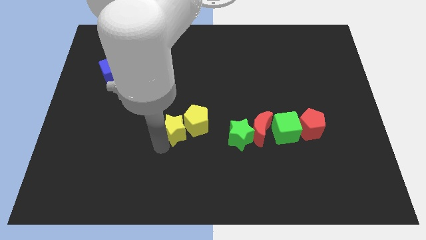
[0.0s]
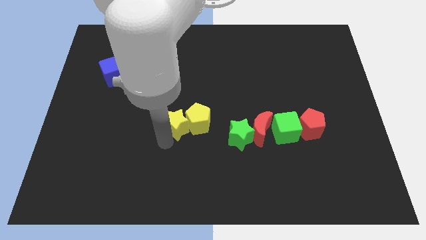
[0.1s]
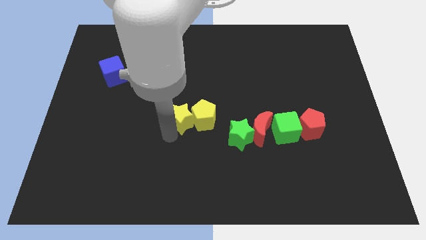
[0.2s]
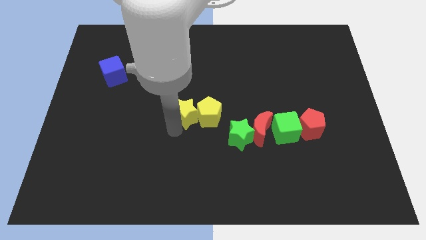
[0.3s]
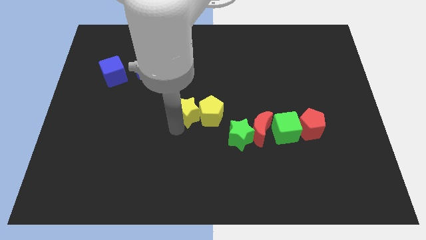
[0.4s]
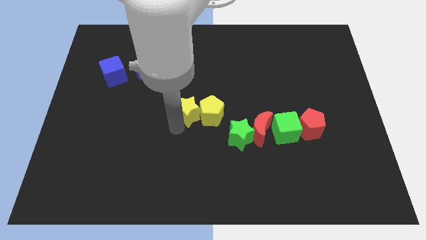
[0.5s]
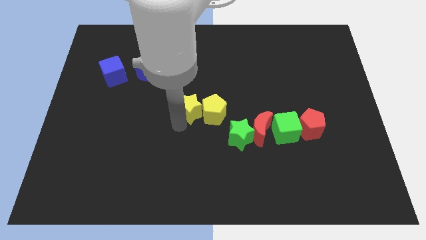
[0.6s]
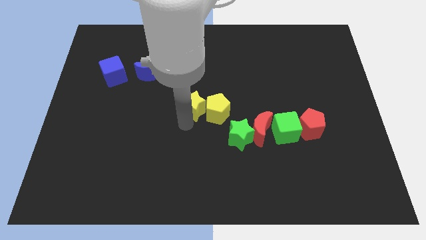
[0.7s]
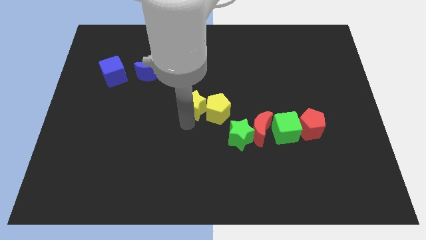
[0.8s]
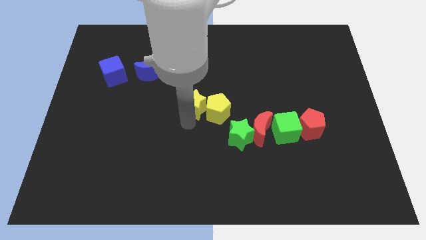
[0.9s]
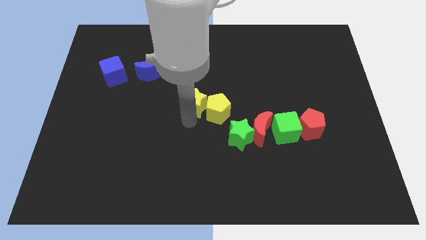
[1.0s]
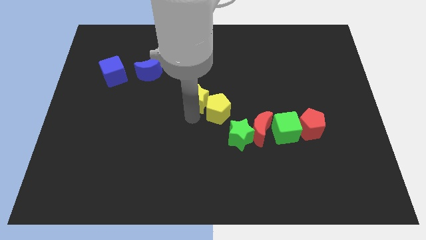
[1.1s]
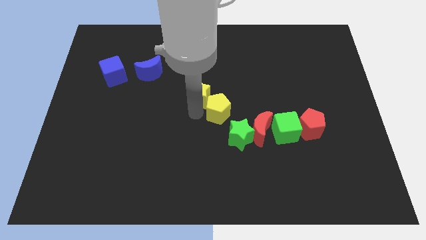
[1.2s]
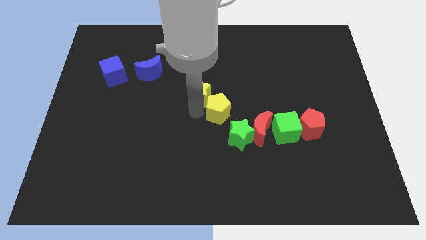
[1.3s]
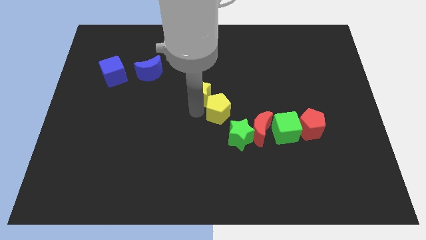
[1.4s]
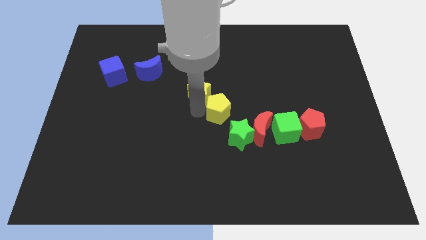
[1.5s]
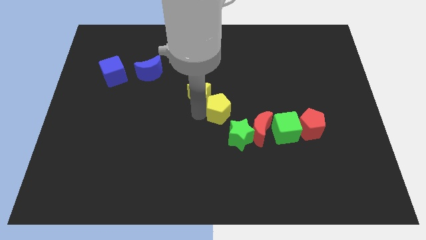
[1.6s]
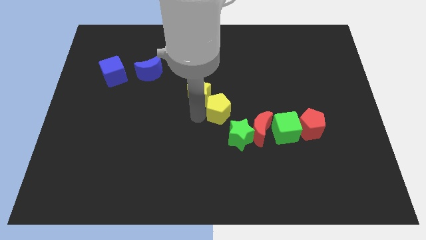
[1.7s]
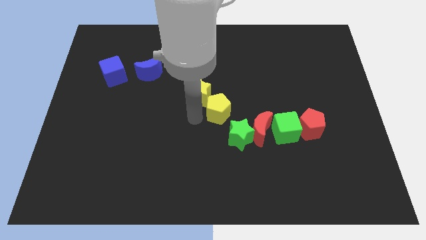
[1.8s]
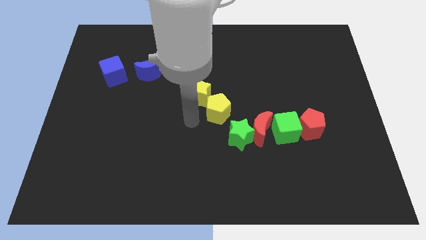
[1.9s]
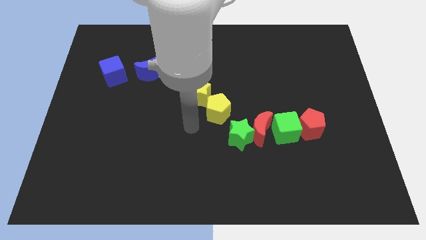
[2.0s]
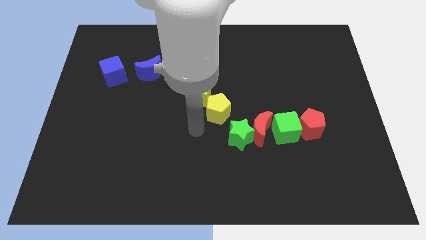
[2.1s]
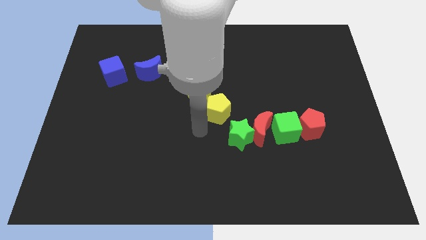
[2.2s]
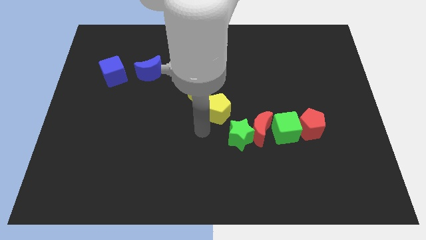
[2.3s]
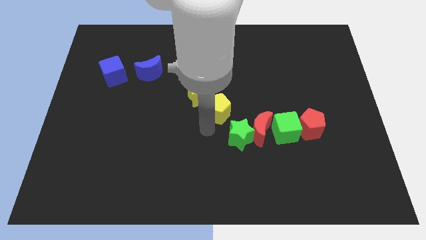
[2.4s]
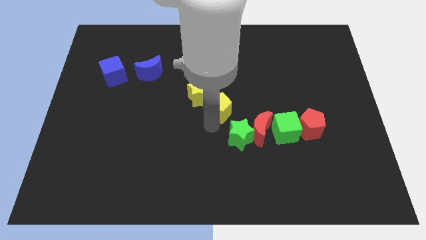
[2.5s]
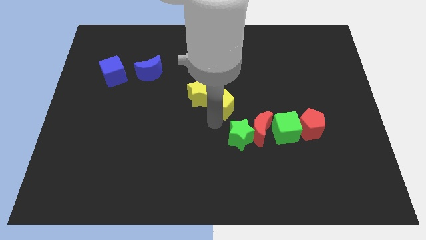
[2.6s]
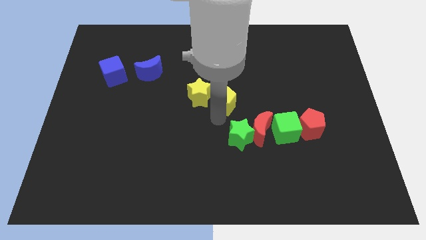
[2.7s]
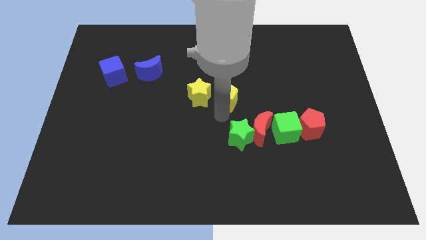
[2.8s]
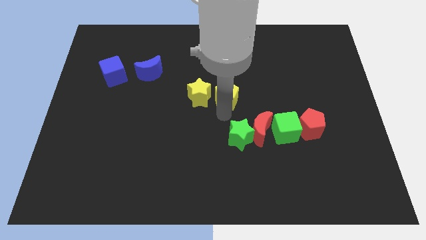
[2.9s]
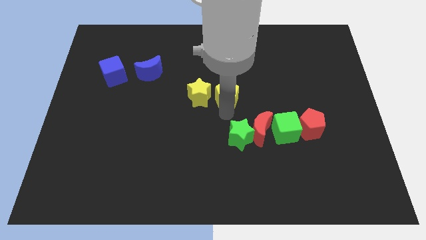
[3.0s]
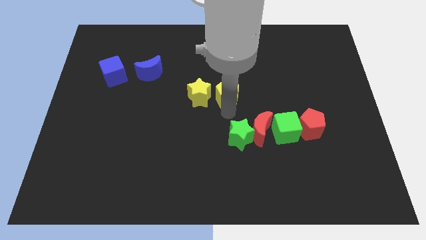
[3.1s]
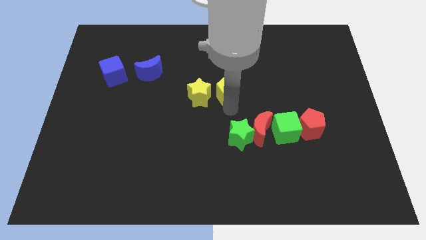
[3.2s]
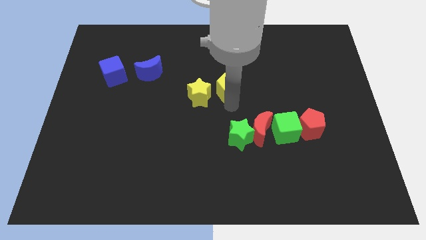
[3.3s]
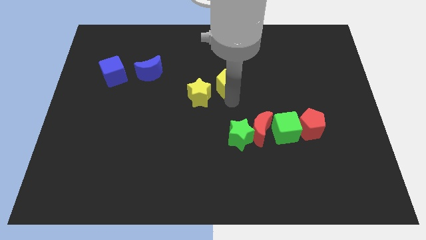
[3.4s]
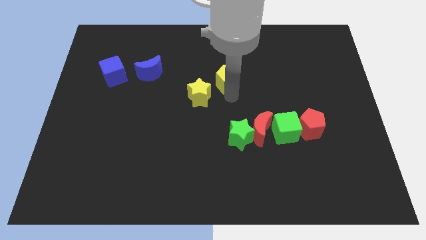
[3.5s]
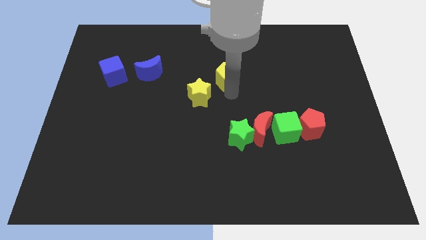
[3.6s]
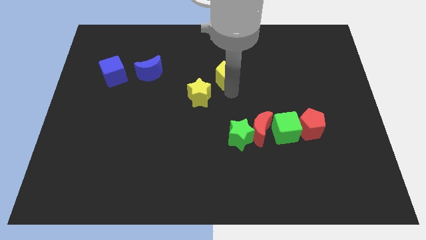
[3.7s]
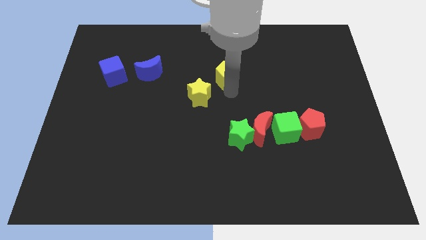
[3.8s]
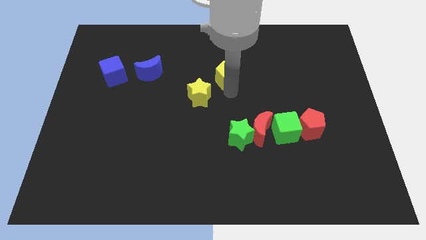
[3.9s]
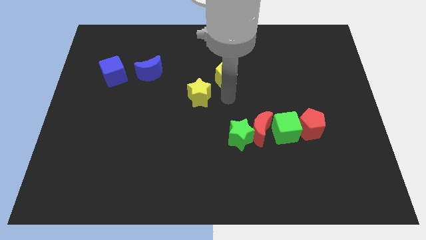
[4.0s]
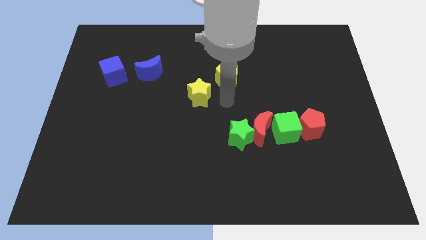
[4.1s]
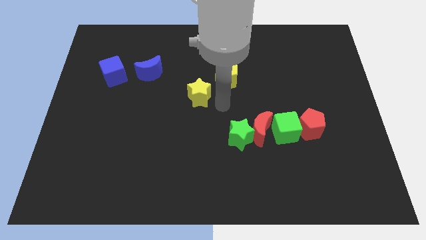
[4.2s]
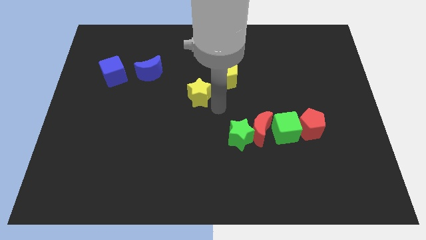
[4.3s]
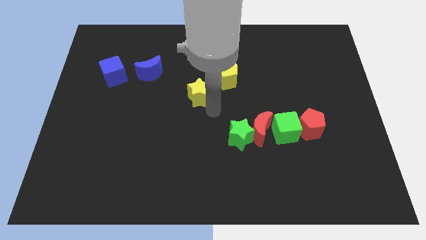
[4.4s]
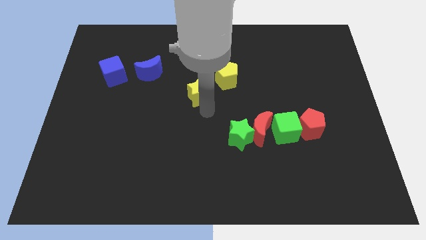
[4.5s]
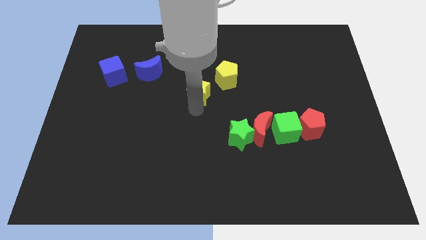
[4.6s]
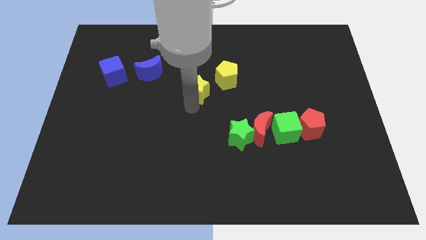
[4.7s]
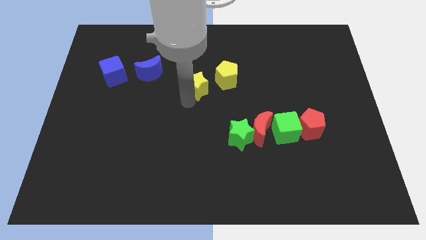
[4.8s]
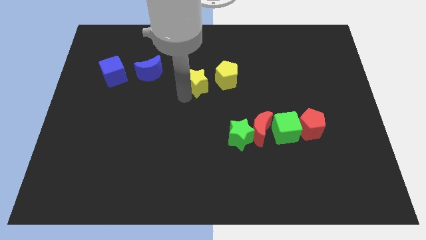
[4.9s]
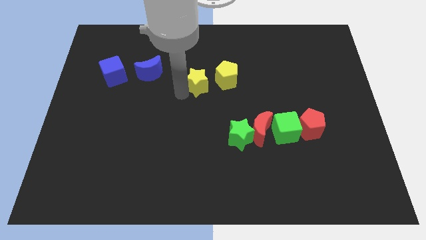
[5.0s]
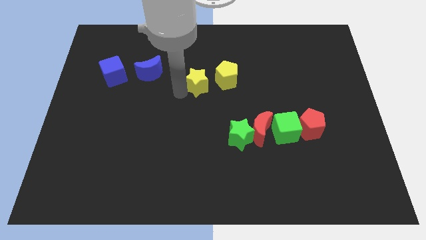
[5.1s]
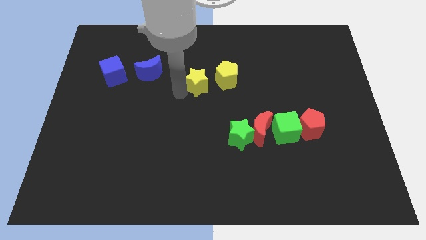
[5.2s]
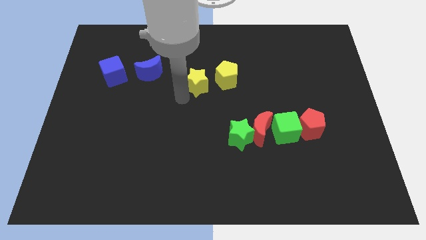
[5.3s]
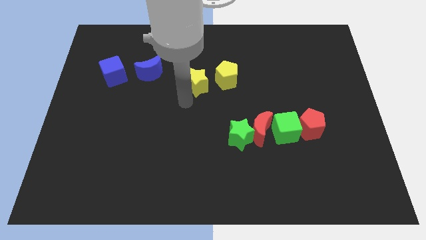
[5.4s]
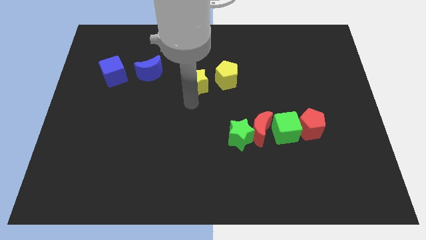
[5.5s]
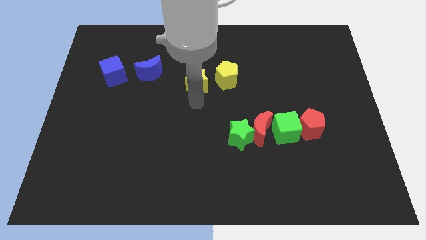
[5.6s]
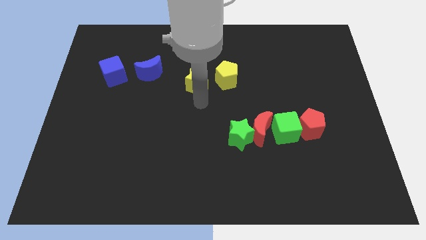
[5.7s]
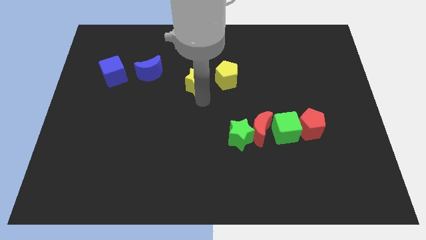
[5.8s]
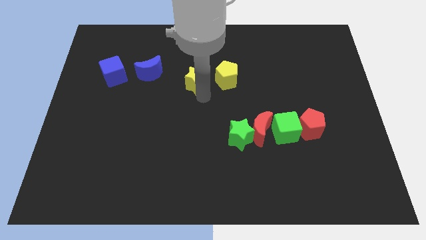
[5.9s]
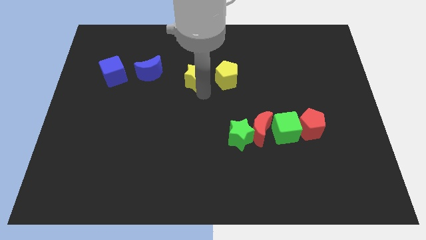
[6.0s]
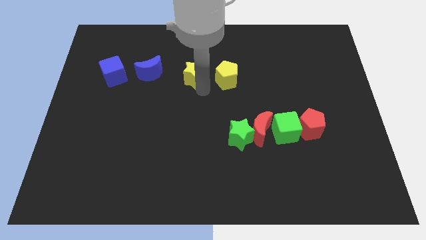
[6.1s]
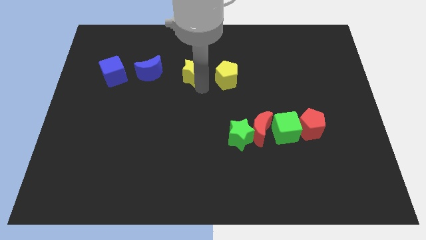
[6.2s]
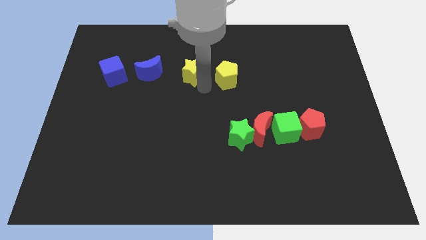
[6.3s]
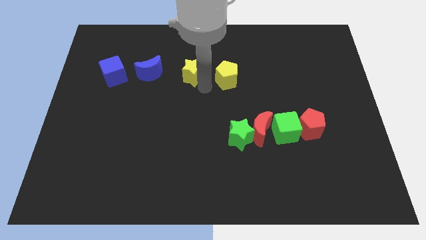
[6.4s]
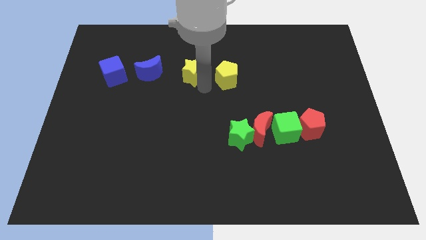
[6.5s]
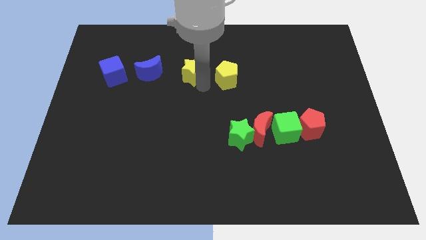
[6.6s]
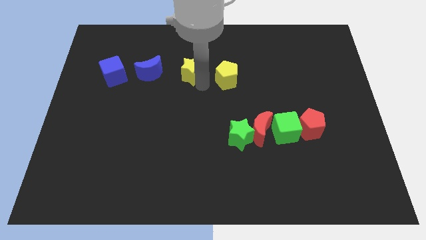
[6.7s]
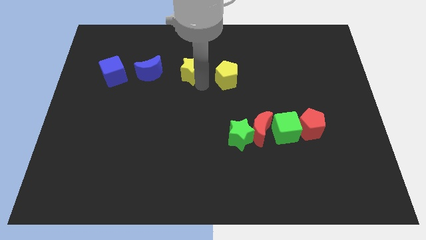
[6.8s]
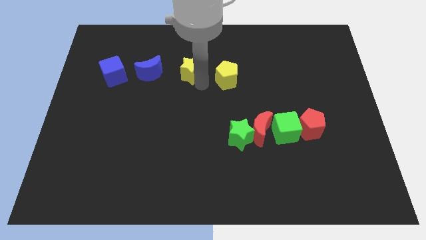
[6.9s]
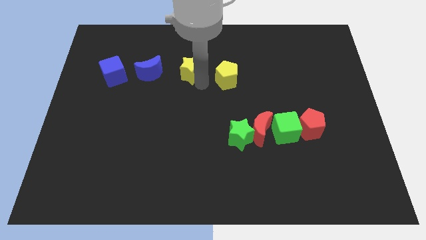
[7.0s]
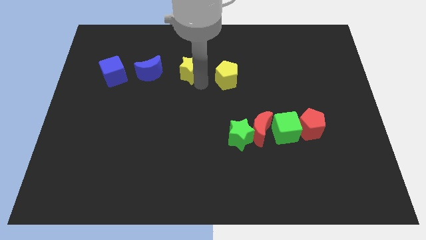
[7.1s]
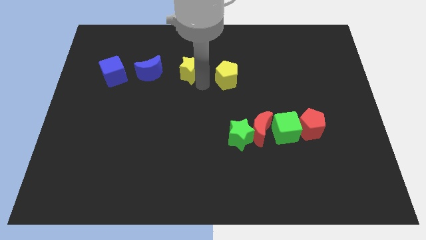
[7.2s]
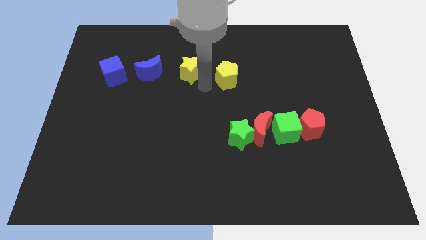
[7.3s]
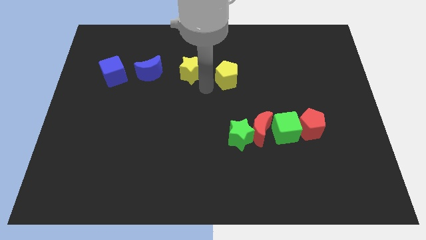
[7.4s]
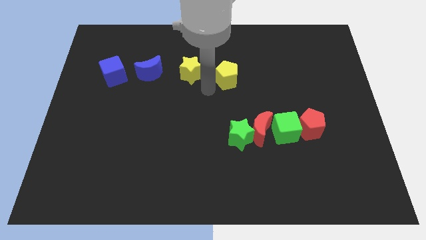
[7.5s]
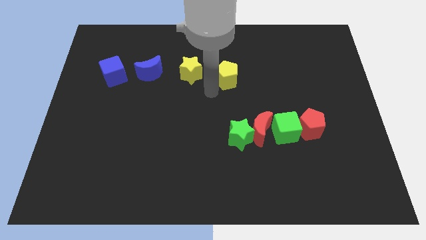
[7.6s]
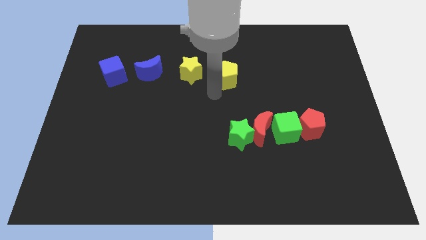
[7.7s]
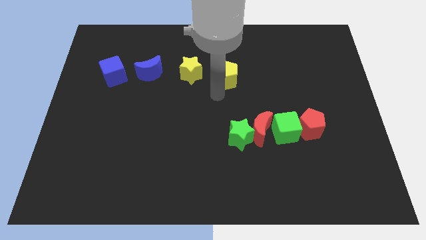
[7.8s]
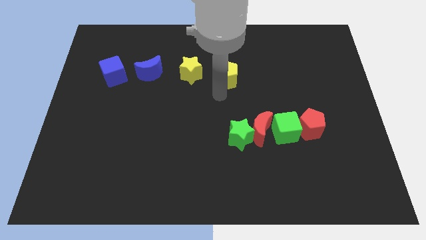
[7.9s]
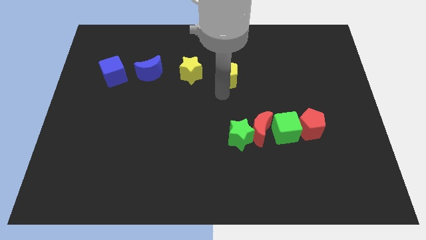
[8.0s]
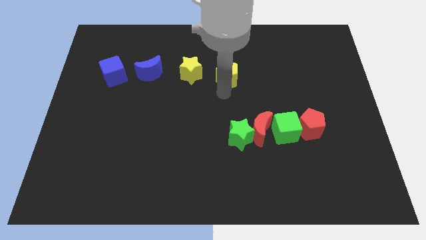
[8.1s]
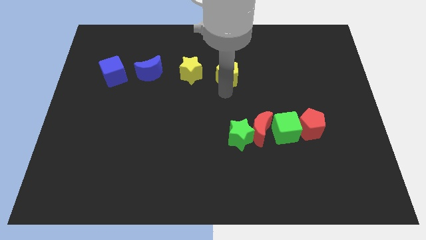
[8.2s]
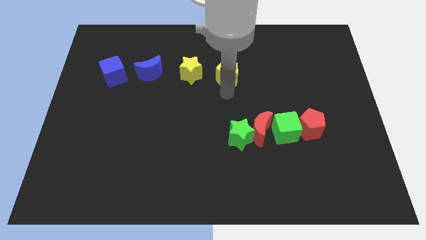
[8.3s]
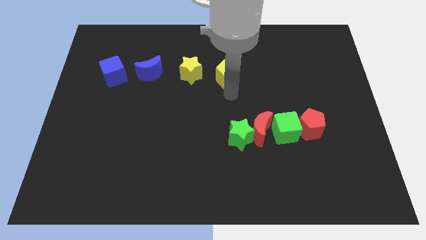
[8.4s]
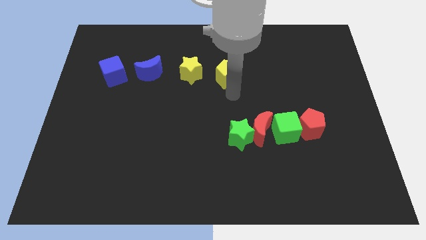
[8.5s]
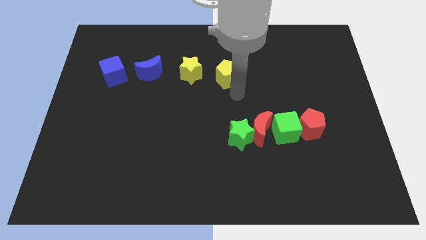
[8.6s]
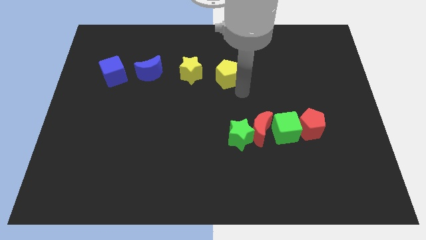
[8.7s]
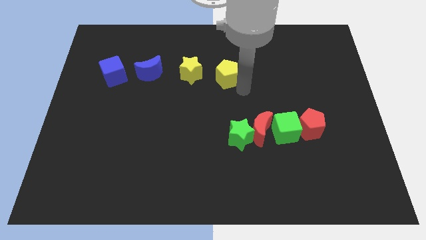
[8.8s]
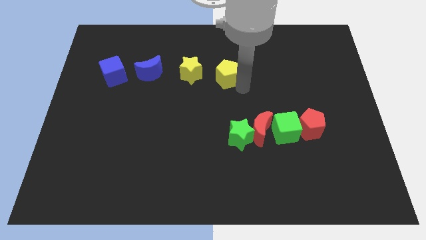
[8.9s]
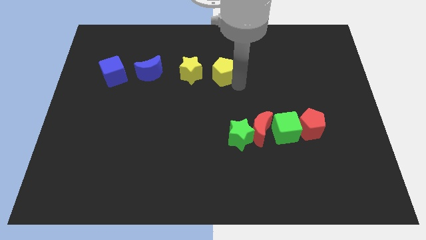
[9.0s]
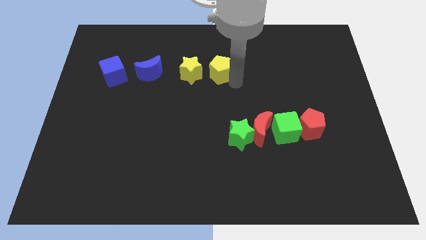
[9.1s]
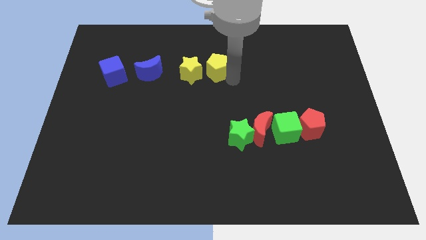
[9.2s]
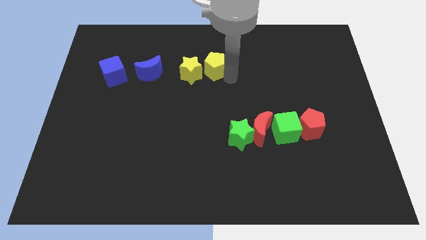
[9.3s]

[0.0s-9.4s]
push the yellow star along with the yellow pentagon to the right side of the blue moon
